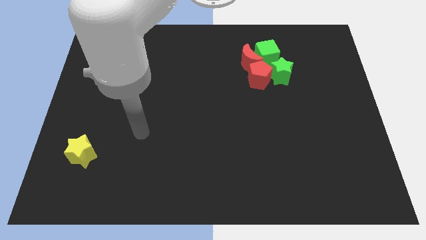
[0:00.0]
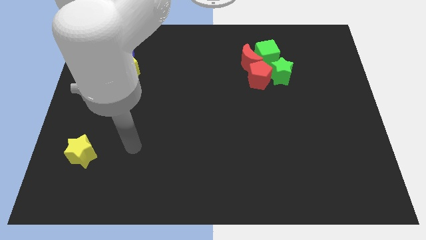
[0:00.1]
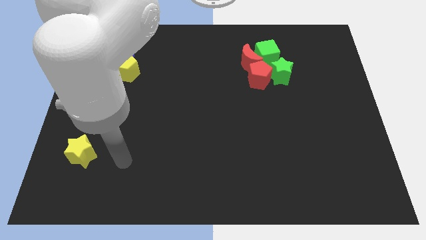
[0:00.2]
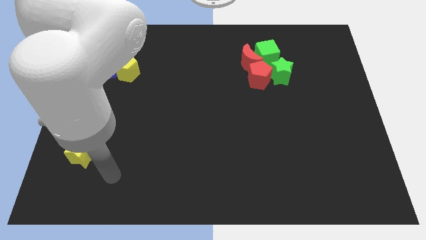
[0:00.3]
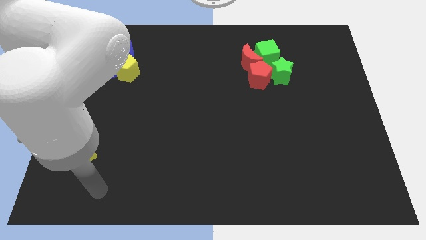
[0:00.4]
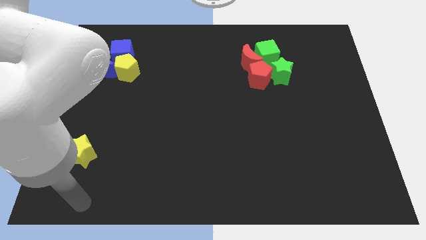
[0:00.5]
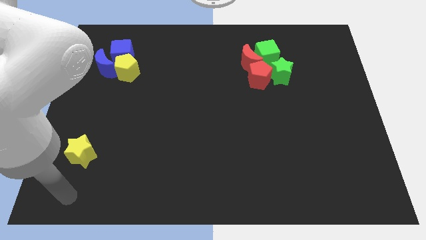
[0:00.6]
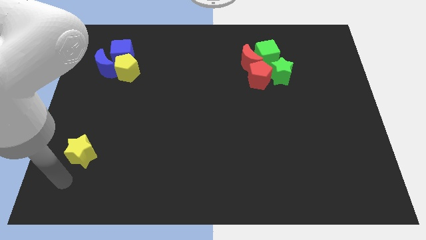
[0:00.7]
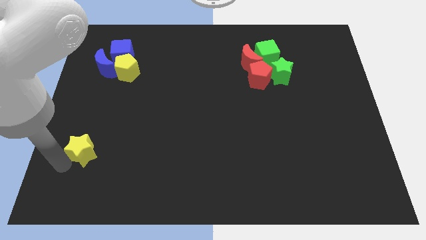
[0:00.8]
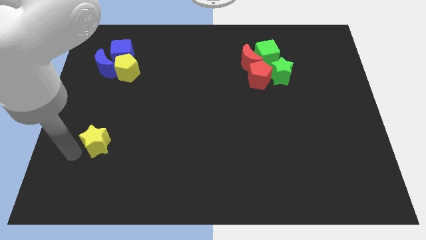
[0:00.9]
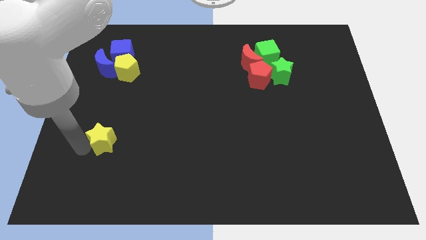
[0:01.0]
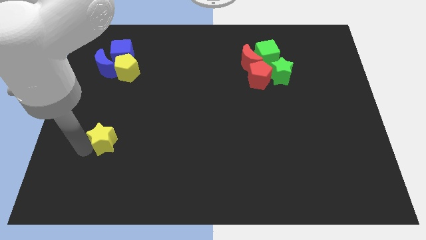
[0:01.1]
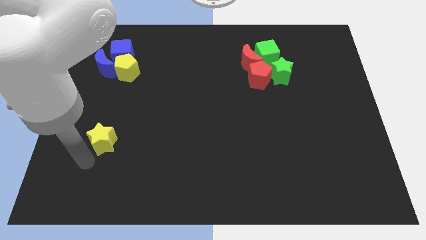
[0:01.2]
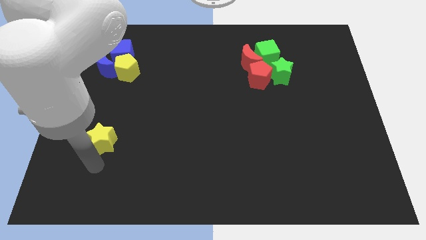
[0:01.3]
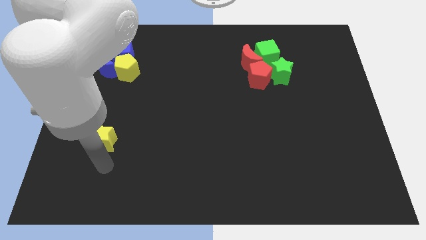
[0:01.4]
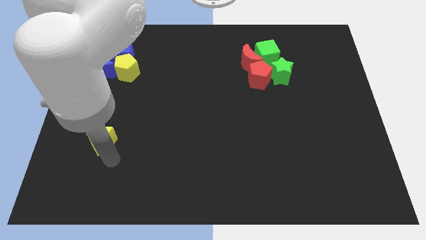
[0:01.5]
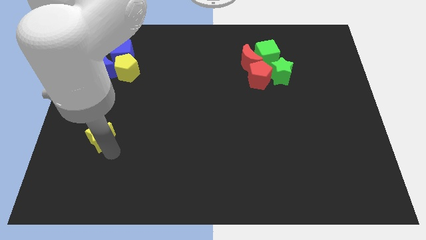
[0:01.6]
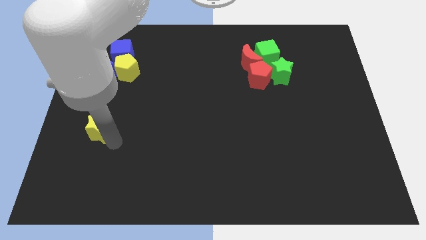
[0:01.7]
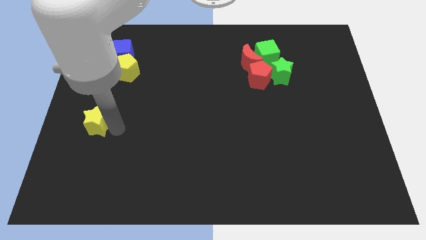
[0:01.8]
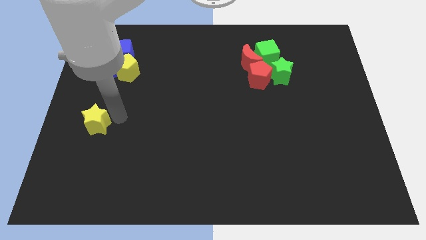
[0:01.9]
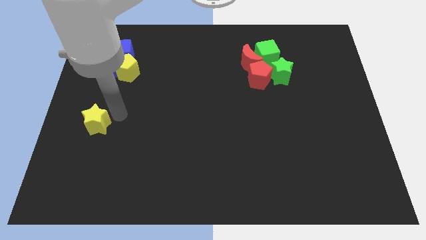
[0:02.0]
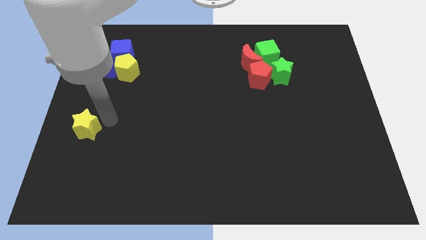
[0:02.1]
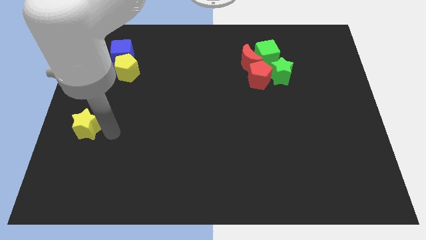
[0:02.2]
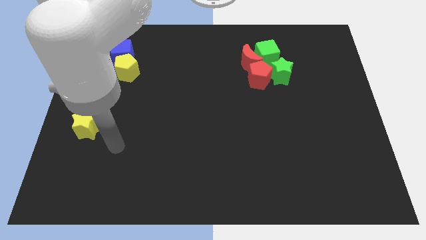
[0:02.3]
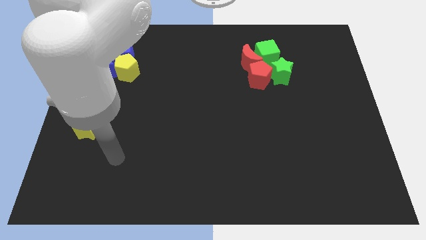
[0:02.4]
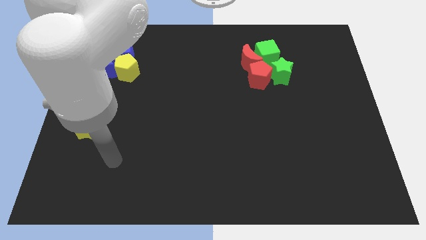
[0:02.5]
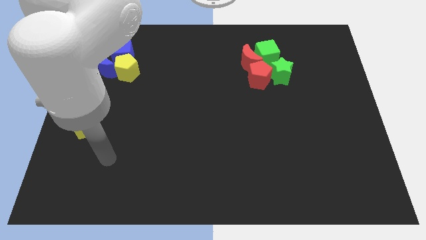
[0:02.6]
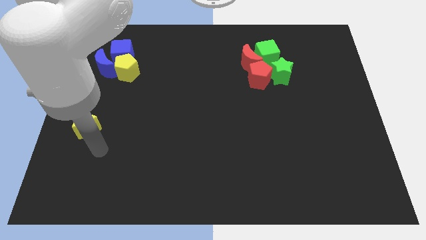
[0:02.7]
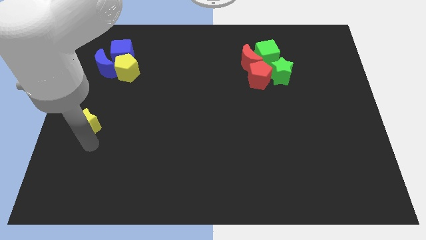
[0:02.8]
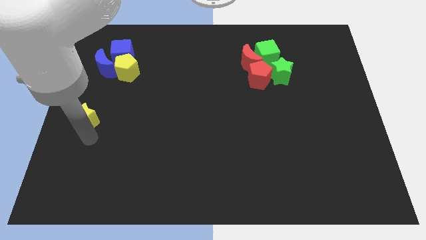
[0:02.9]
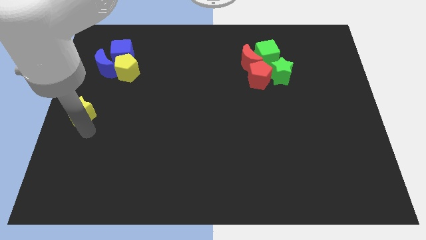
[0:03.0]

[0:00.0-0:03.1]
move yellow star middle of the board

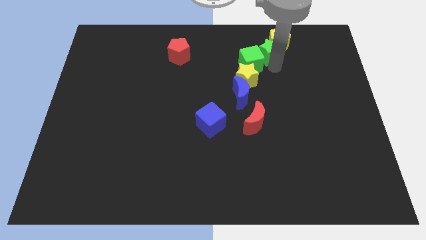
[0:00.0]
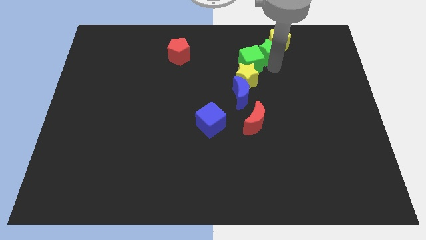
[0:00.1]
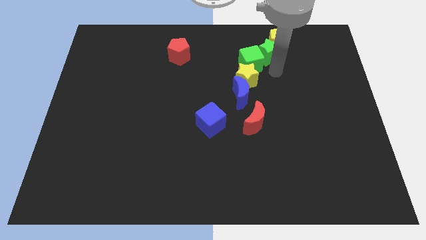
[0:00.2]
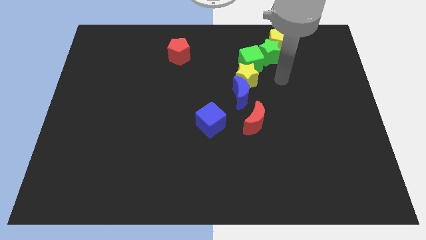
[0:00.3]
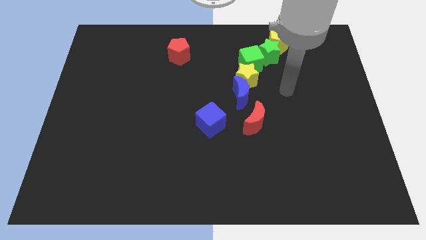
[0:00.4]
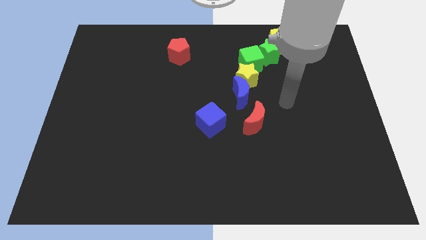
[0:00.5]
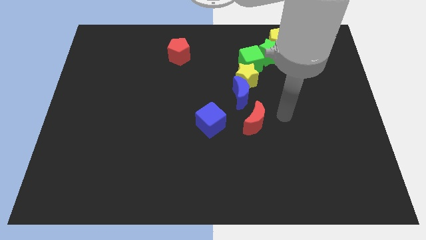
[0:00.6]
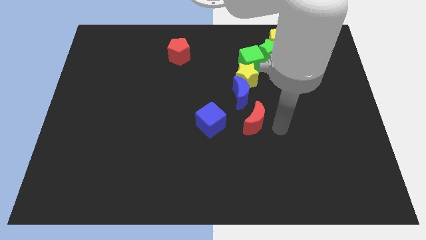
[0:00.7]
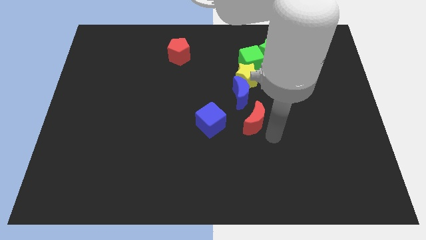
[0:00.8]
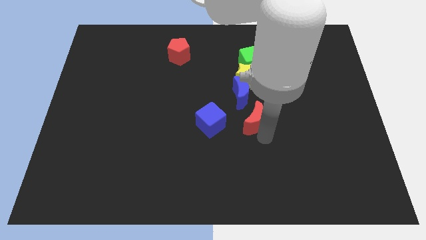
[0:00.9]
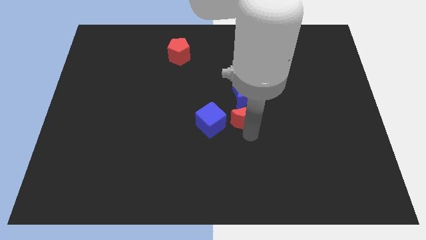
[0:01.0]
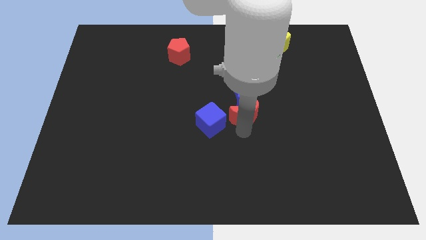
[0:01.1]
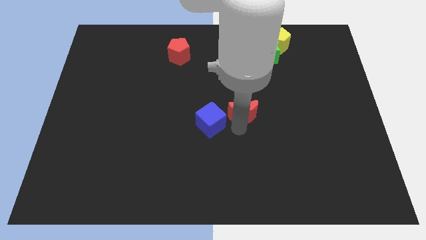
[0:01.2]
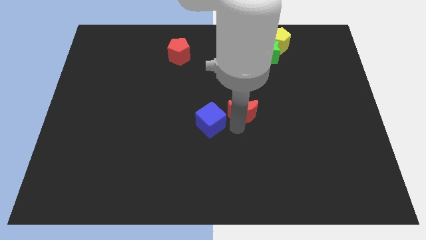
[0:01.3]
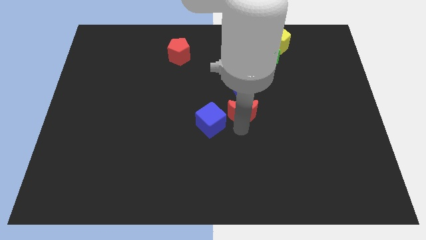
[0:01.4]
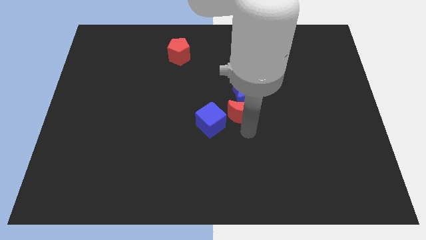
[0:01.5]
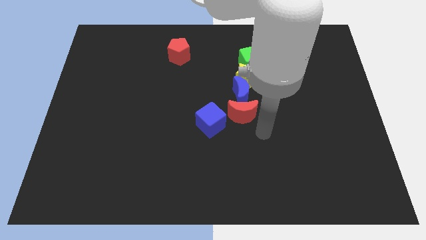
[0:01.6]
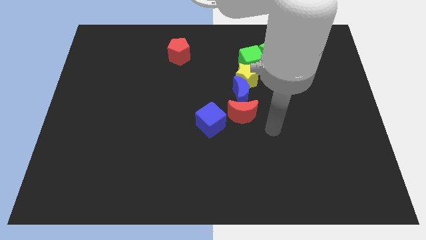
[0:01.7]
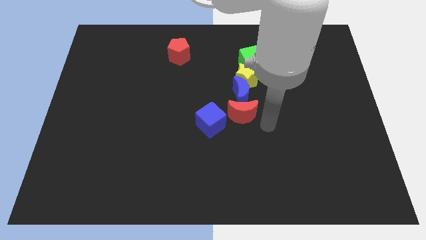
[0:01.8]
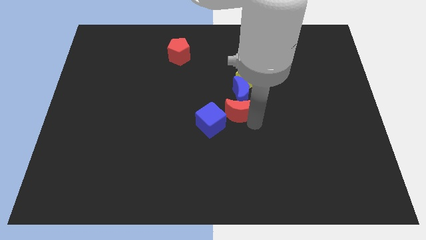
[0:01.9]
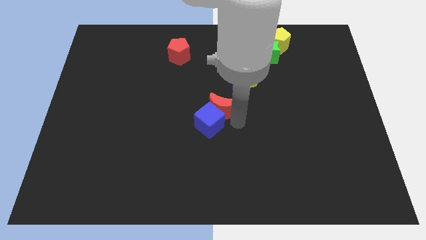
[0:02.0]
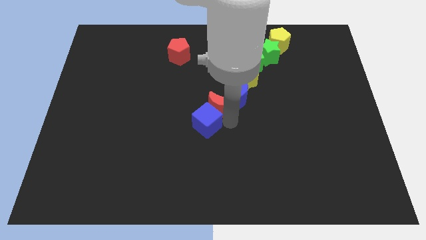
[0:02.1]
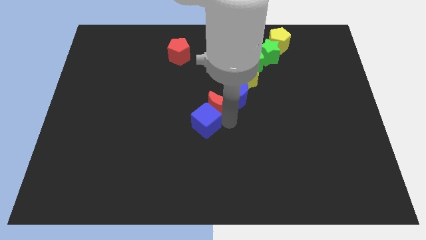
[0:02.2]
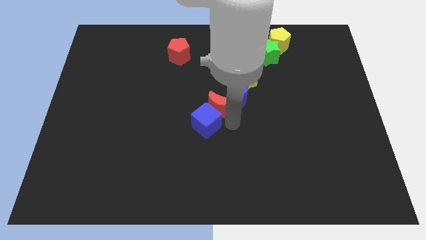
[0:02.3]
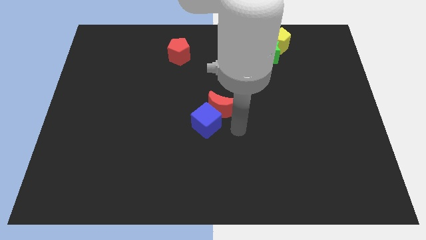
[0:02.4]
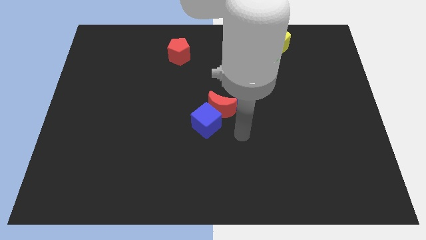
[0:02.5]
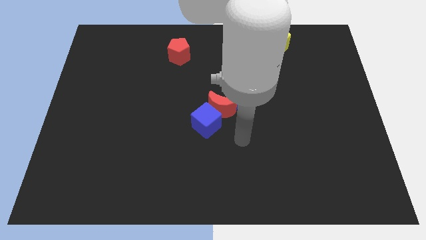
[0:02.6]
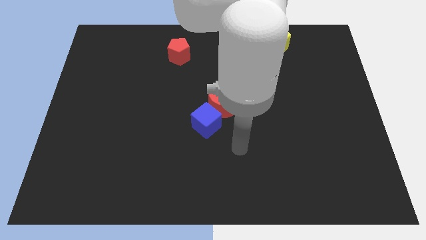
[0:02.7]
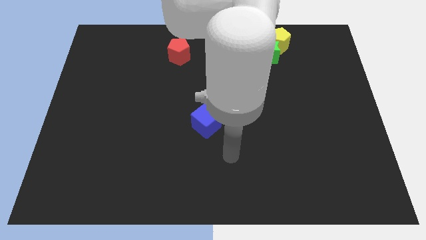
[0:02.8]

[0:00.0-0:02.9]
move the red crescent to the center of the board

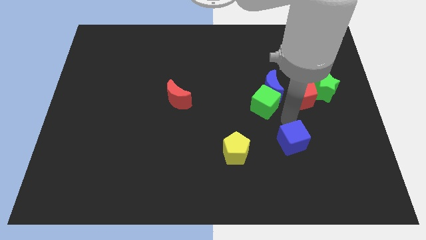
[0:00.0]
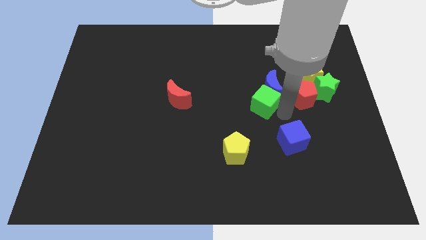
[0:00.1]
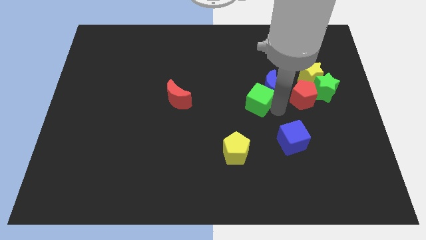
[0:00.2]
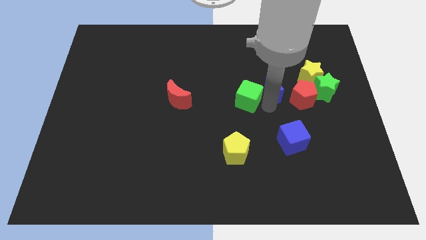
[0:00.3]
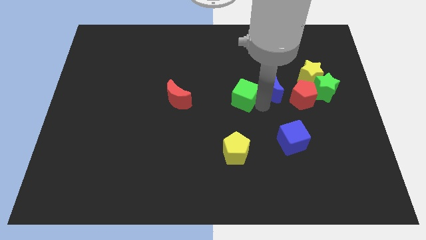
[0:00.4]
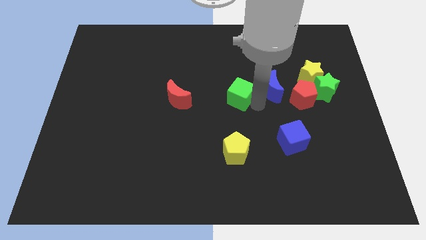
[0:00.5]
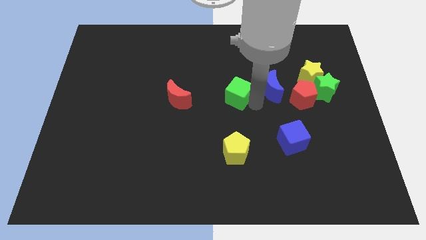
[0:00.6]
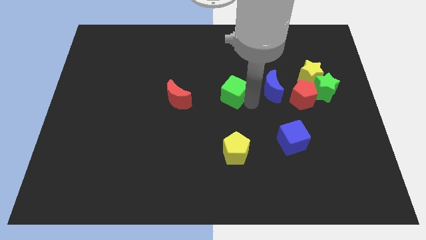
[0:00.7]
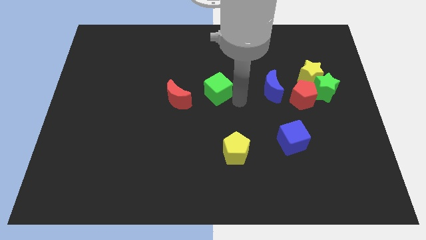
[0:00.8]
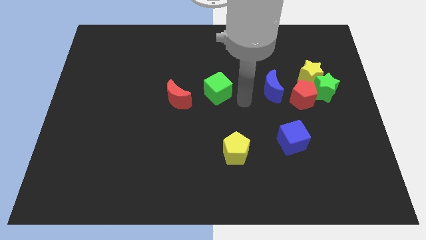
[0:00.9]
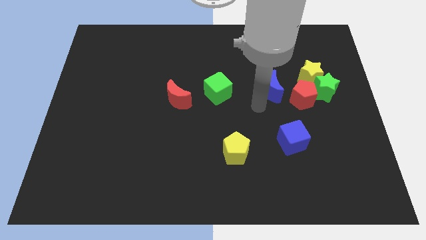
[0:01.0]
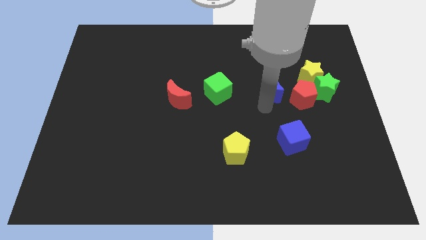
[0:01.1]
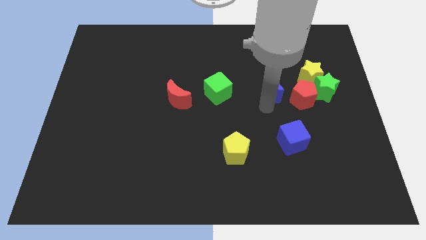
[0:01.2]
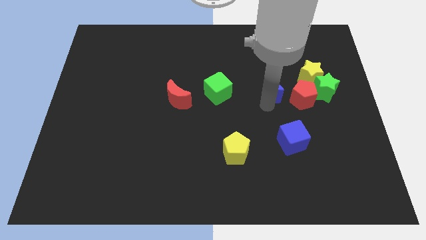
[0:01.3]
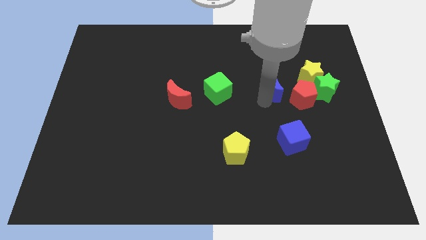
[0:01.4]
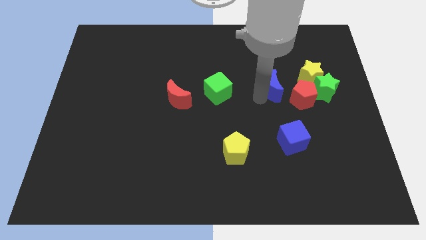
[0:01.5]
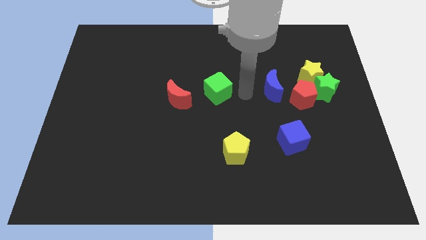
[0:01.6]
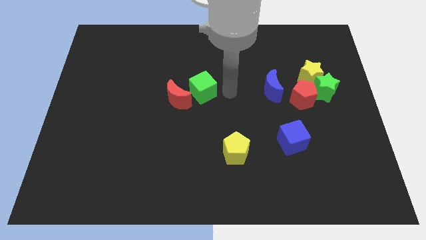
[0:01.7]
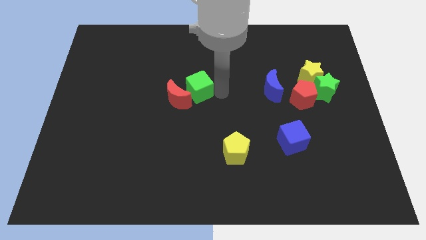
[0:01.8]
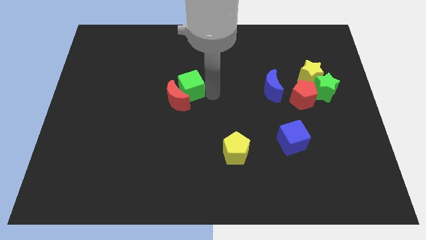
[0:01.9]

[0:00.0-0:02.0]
move your arm away from the blue cube

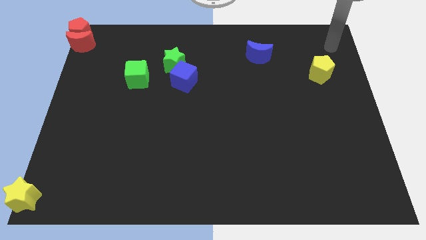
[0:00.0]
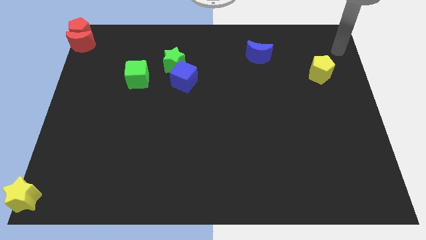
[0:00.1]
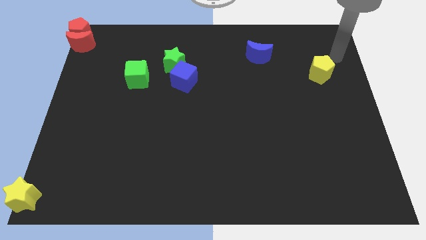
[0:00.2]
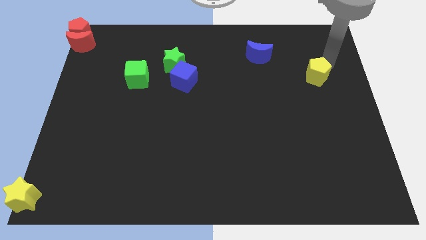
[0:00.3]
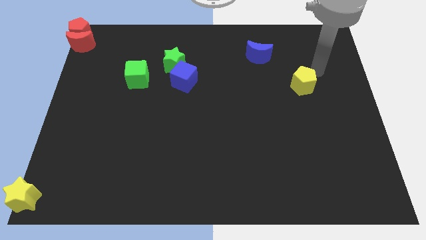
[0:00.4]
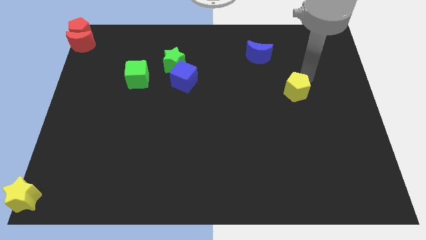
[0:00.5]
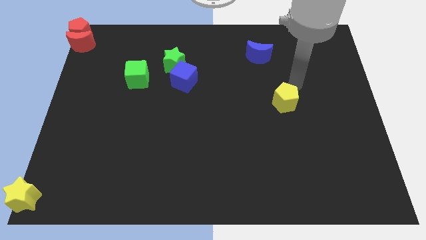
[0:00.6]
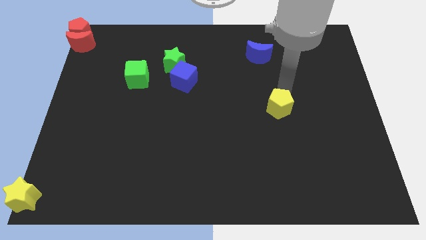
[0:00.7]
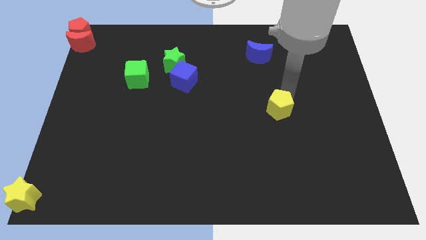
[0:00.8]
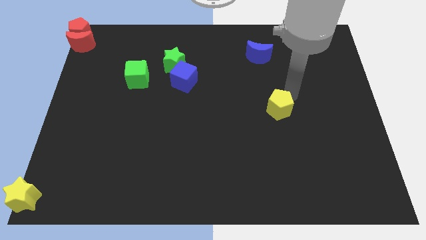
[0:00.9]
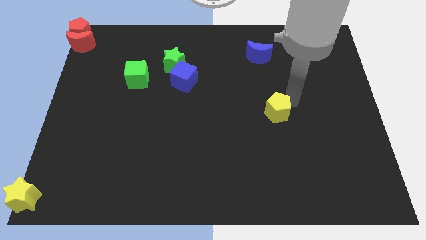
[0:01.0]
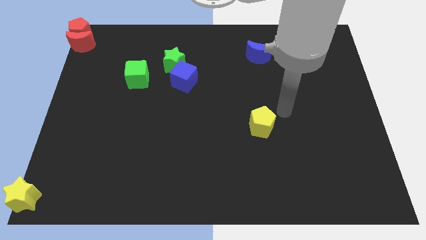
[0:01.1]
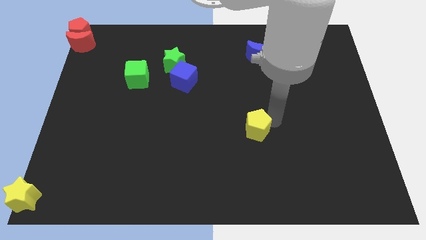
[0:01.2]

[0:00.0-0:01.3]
push the yellow pentagon vertically to the bottom of the blue moon
